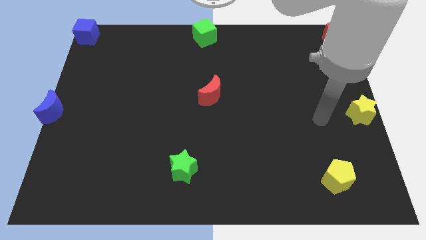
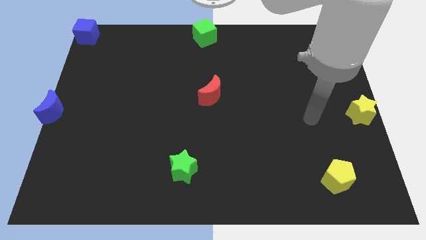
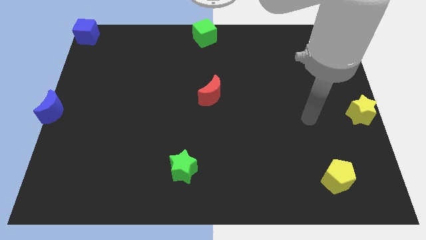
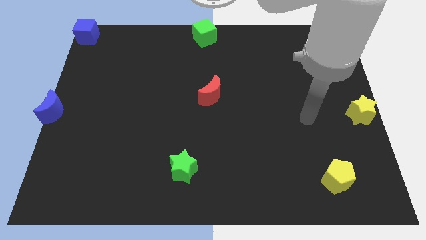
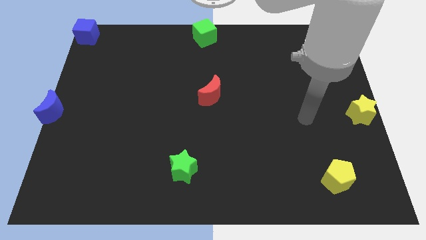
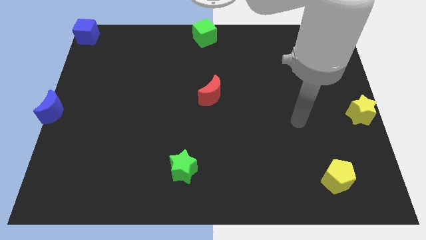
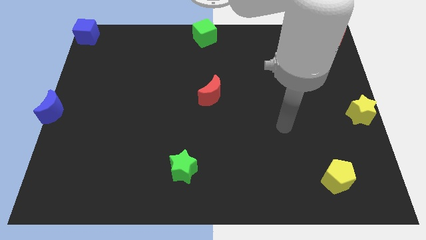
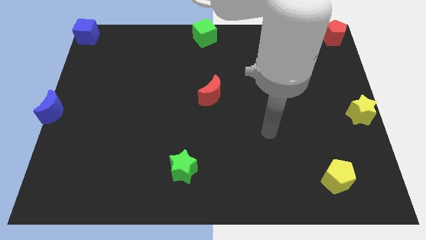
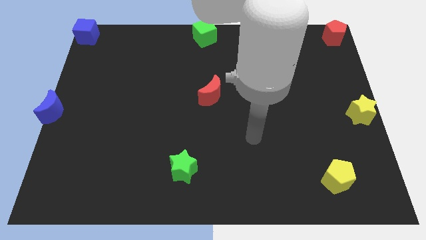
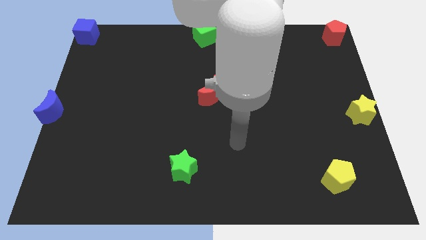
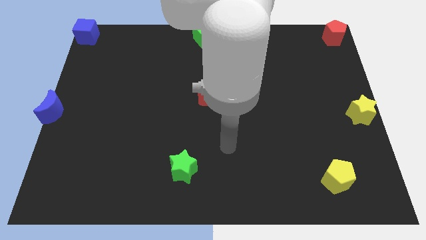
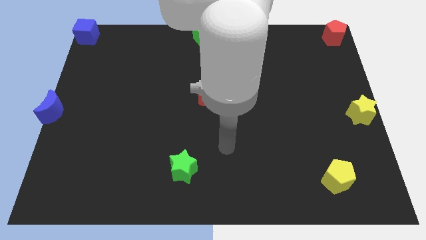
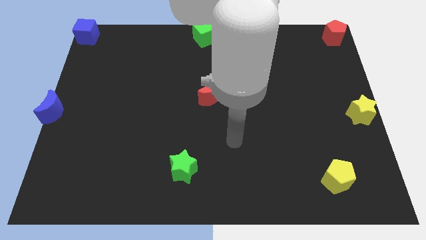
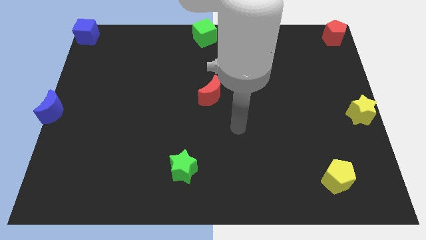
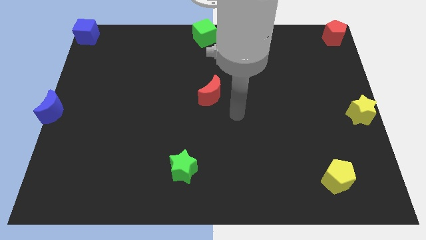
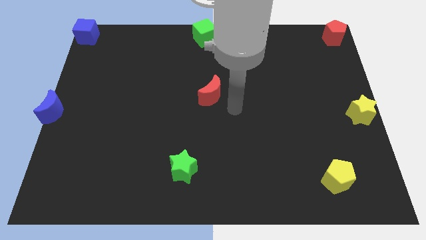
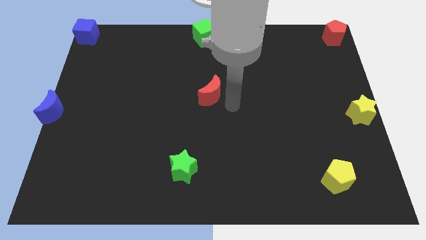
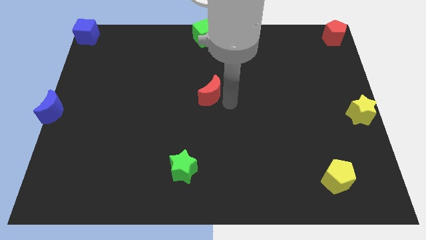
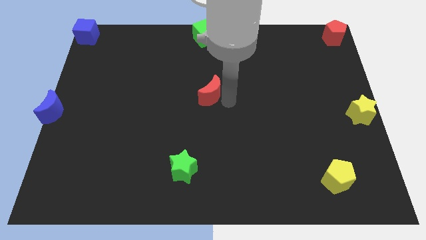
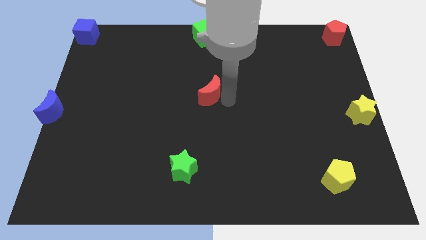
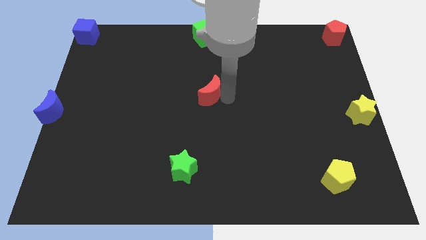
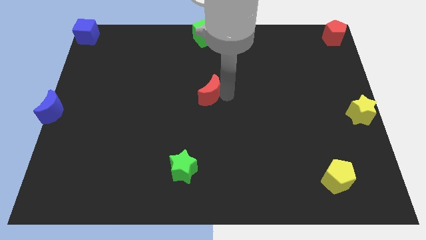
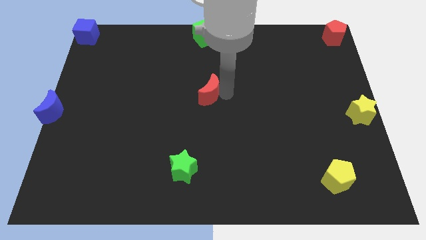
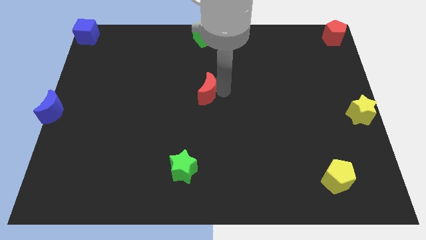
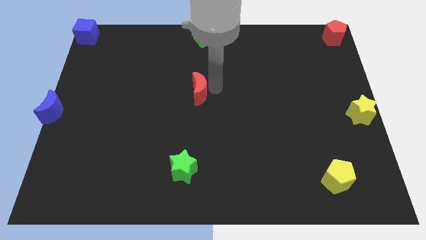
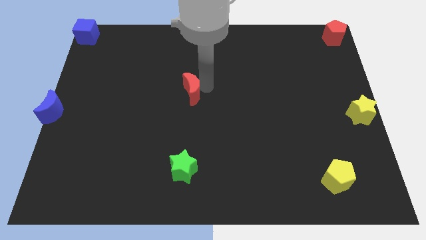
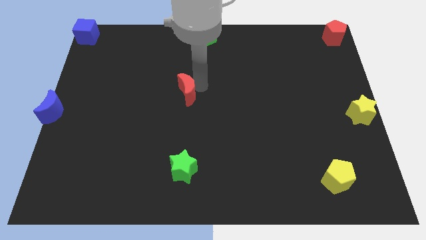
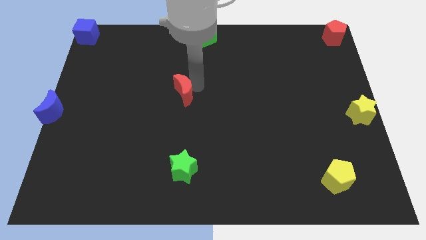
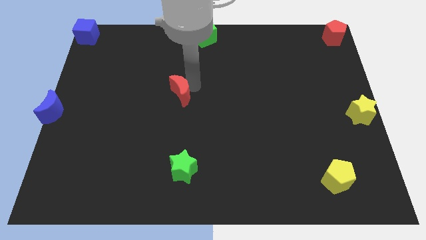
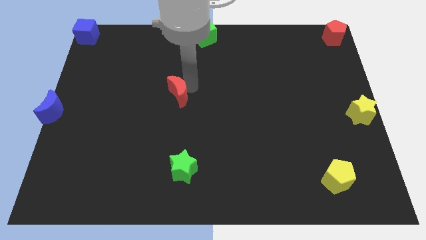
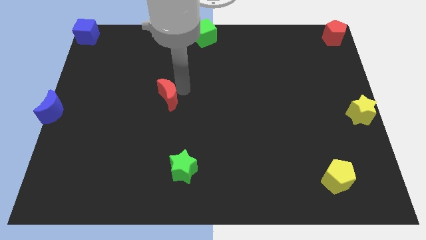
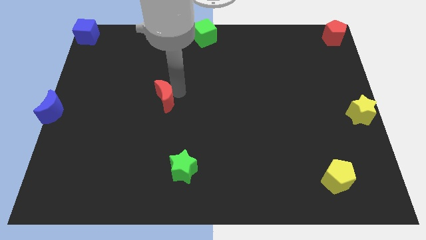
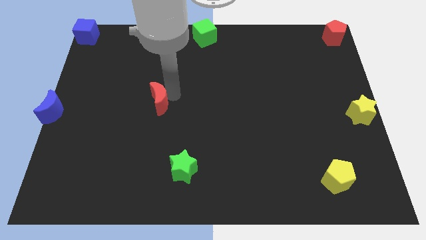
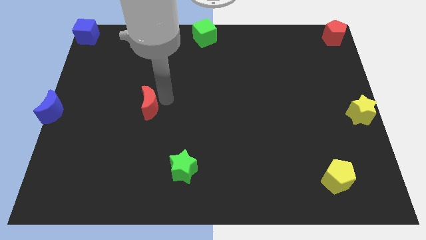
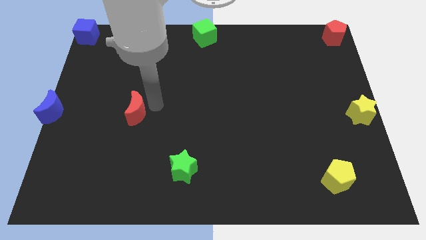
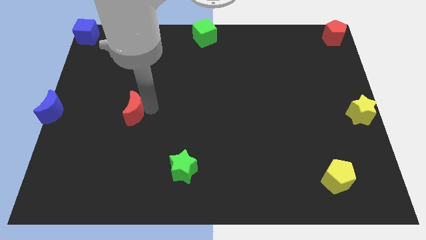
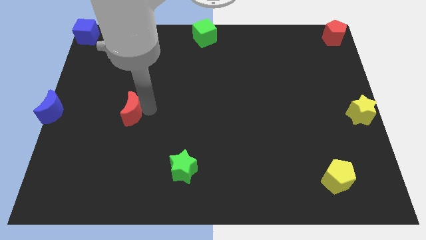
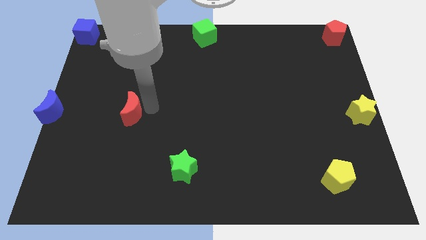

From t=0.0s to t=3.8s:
push the red crescent to the top left of the green star

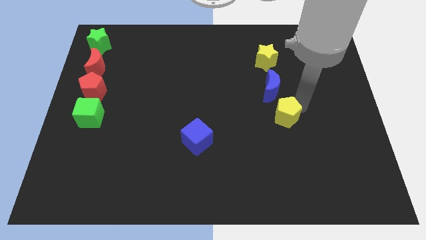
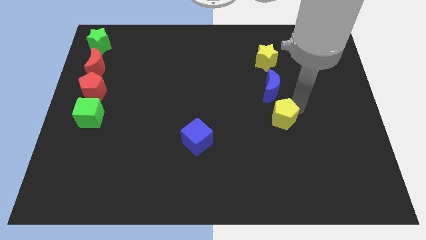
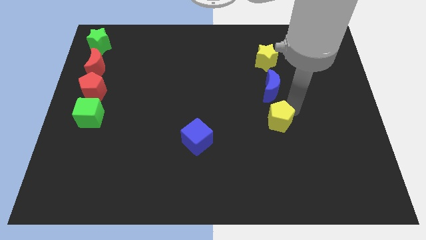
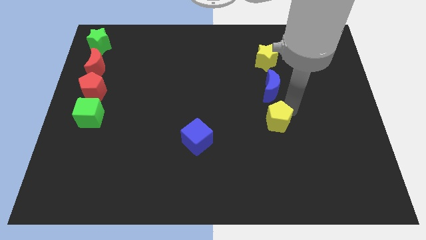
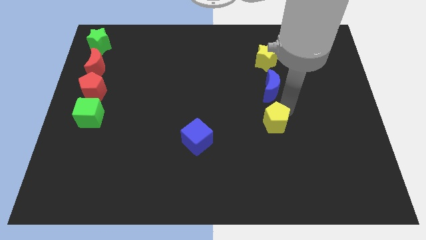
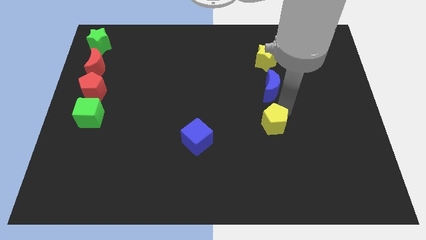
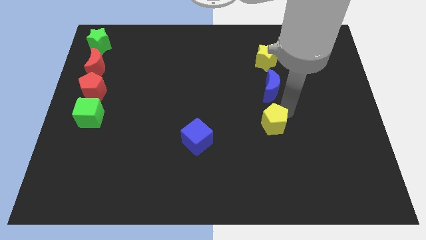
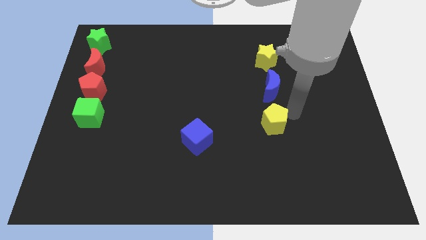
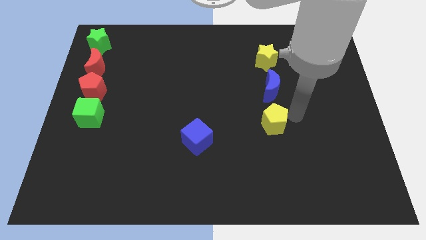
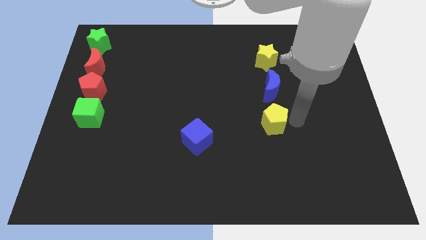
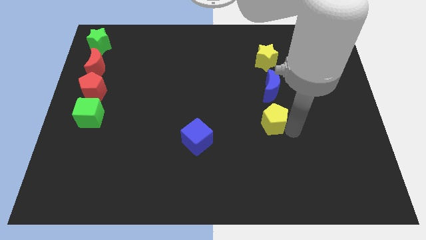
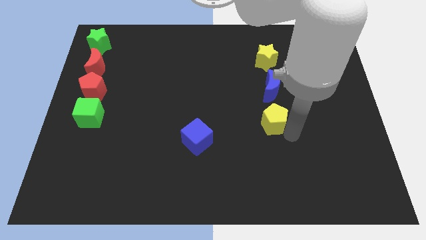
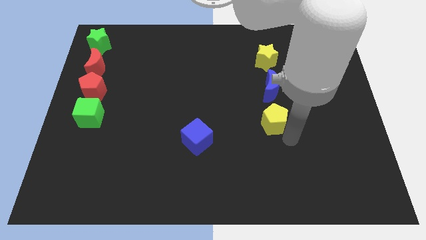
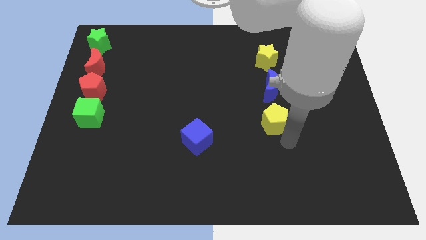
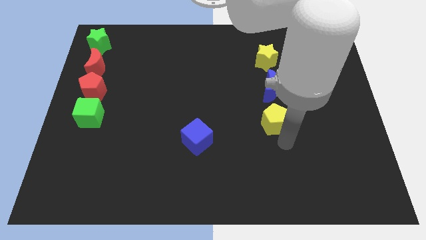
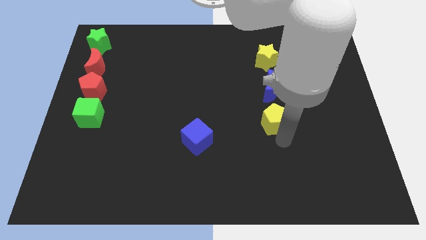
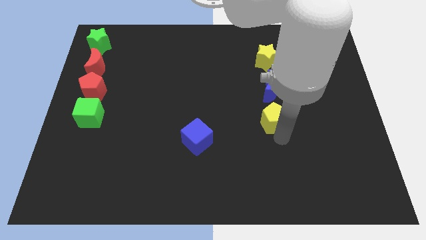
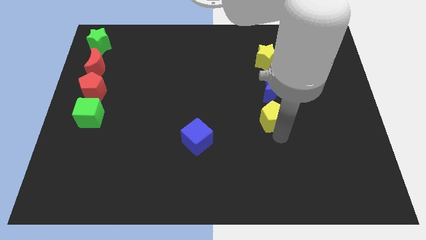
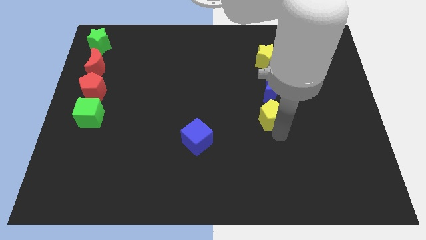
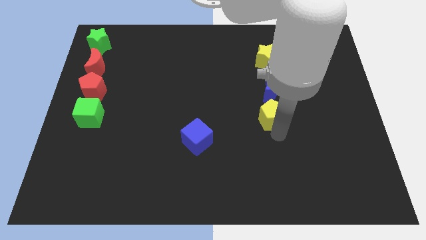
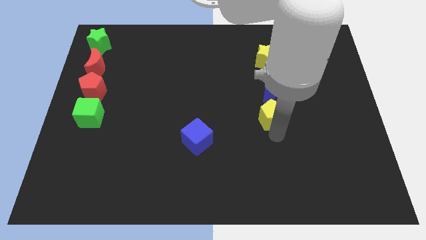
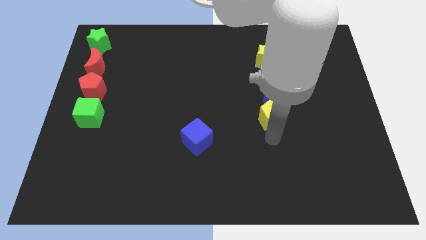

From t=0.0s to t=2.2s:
place the yellow pentagon below the blue moon

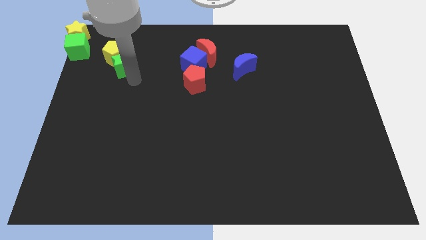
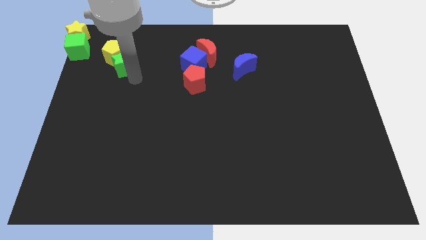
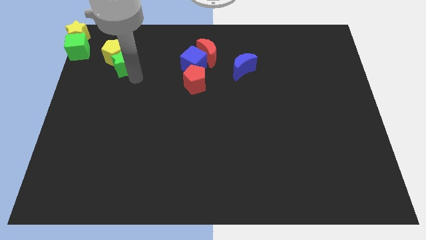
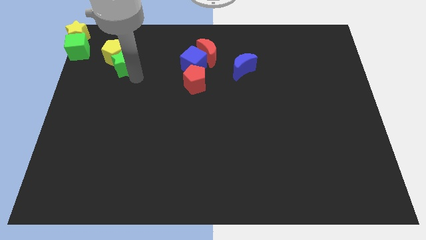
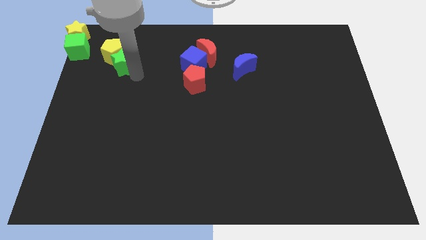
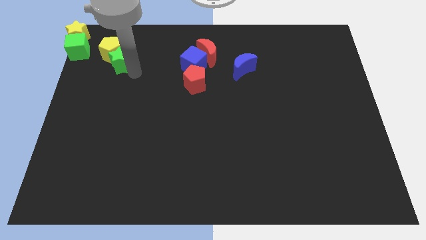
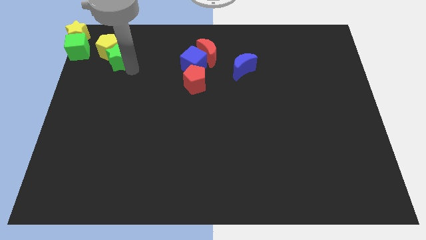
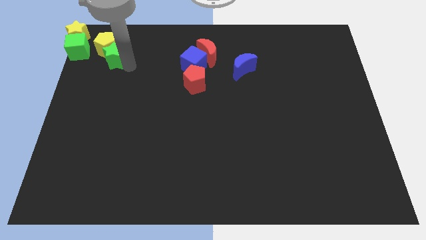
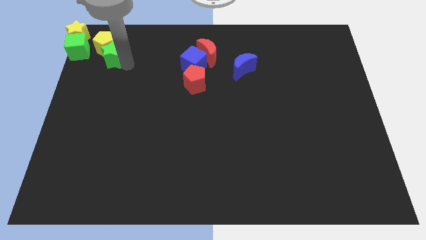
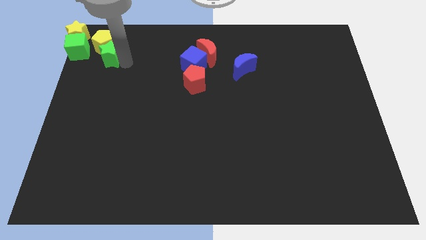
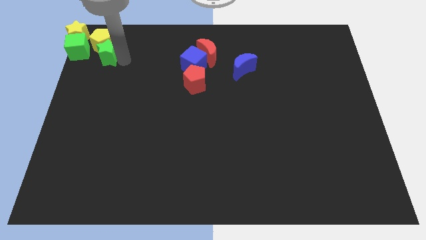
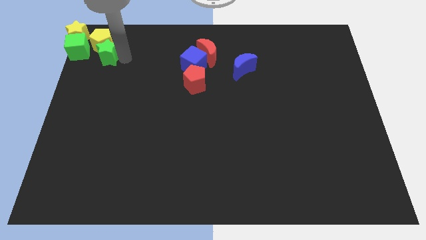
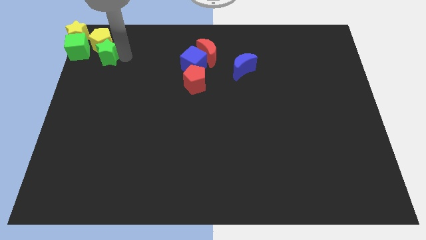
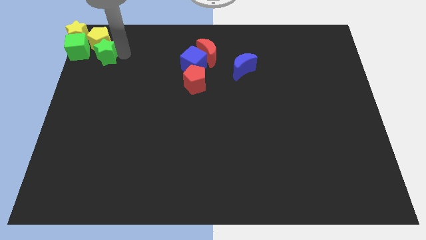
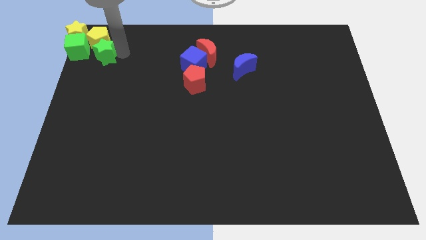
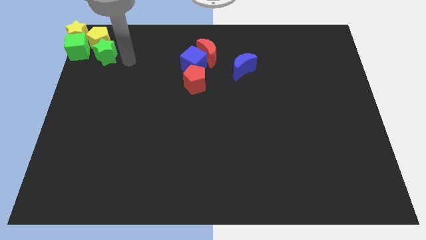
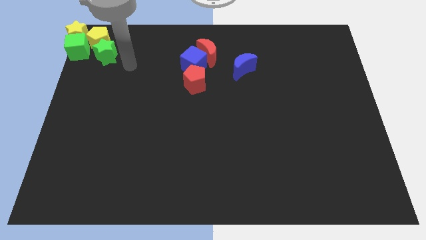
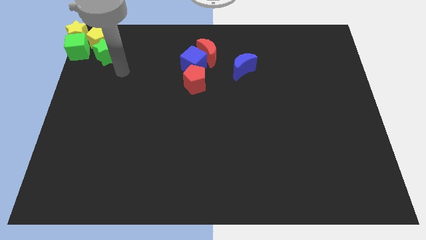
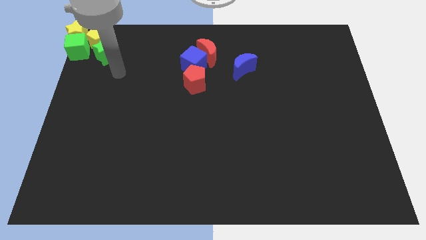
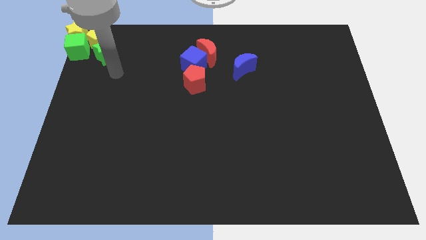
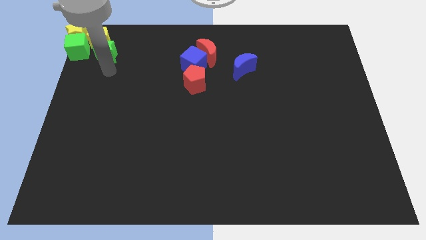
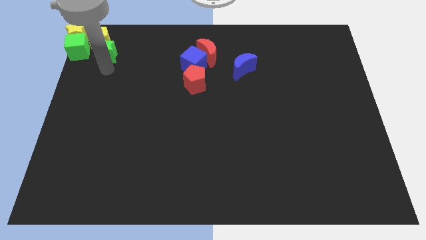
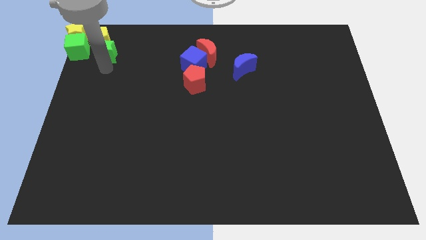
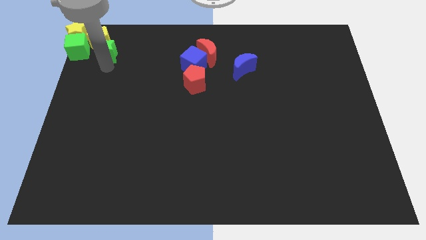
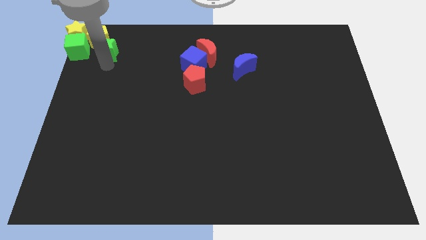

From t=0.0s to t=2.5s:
move the yellow pentagon along with the green star to the top left corner

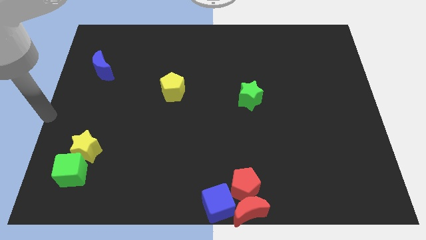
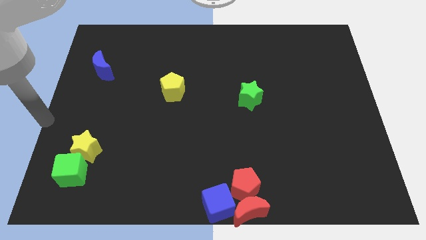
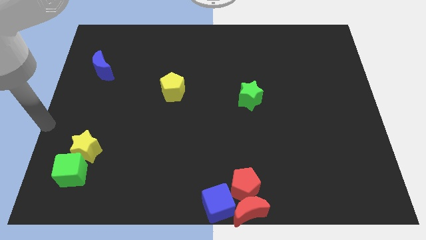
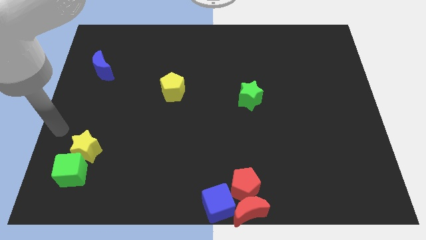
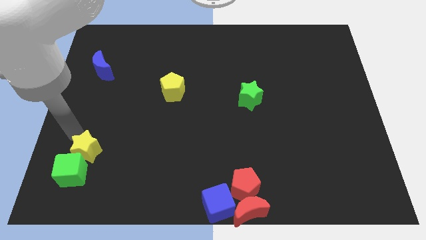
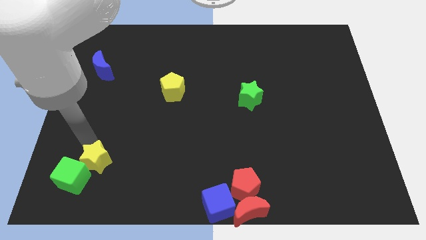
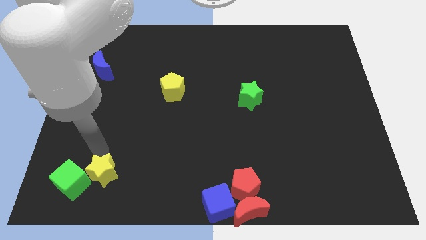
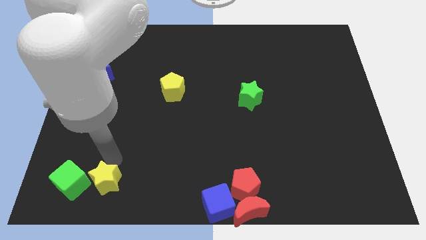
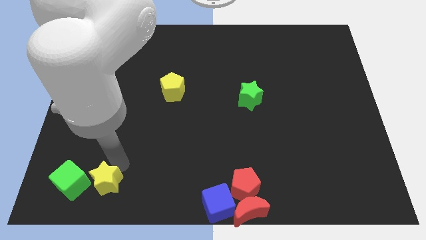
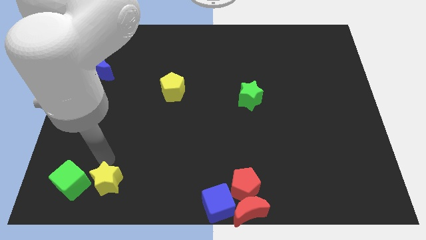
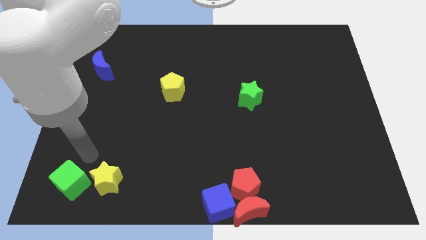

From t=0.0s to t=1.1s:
push yellow star beside green cube
